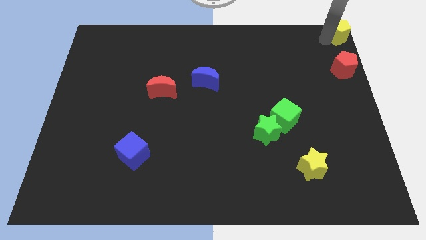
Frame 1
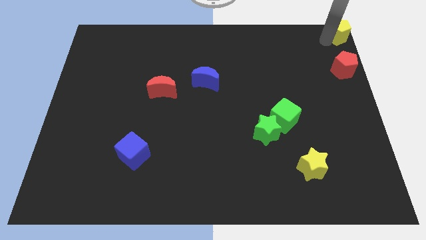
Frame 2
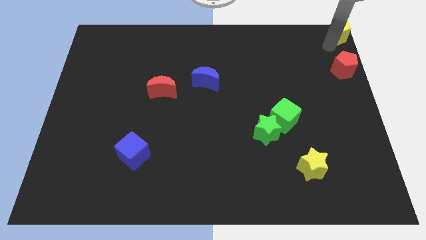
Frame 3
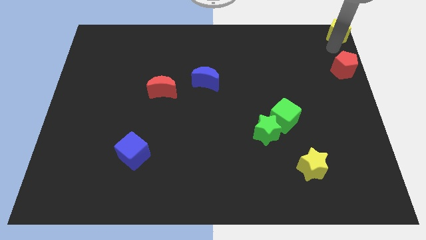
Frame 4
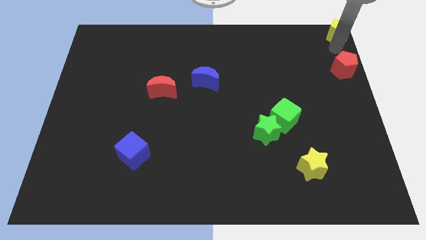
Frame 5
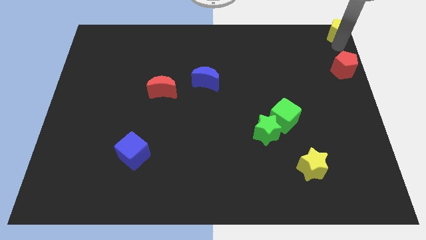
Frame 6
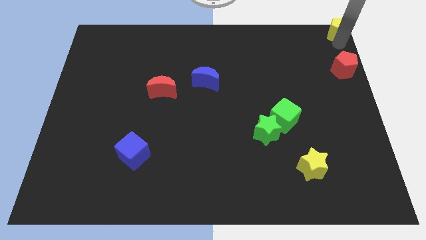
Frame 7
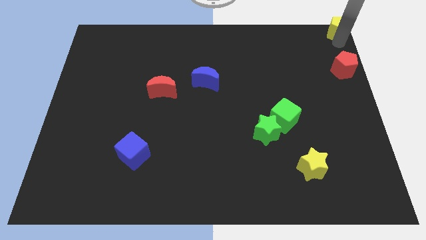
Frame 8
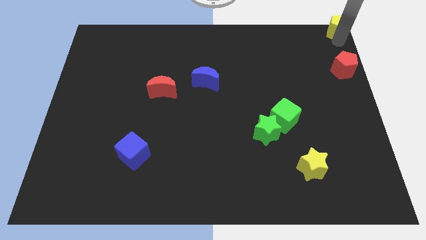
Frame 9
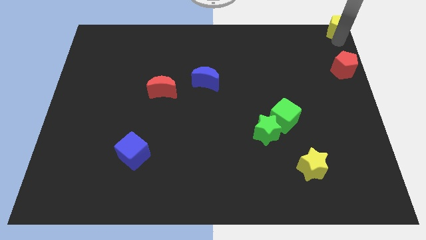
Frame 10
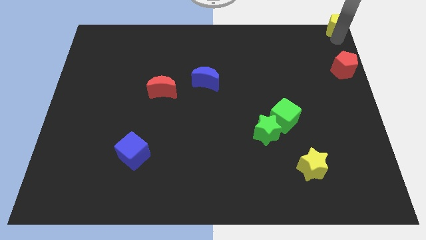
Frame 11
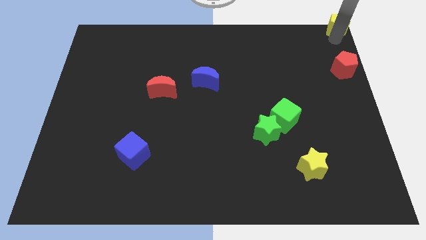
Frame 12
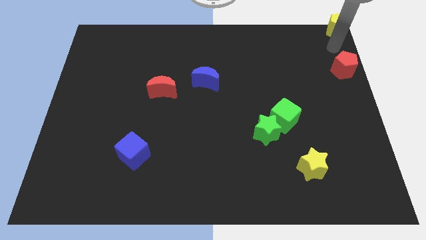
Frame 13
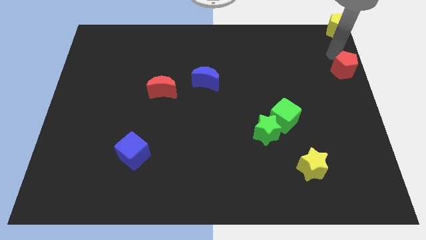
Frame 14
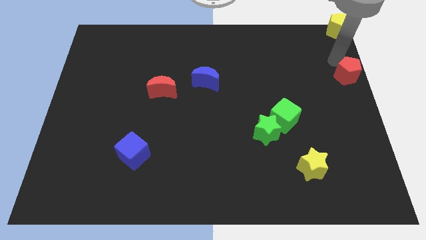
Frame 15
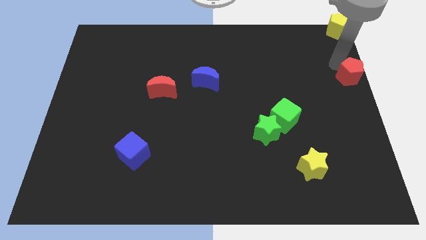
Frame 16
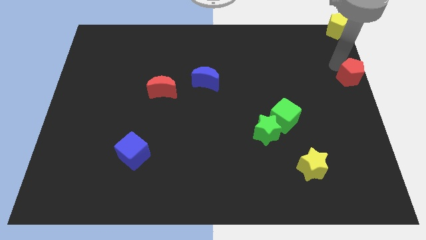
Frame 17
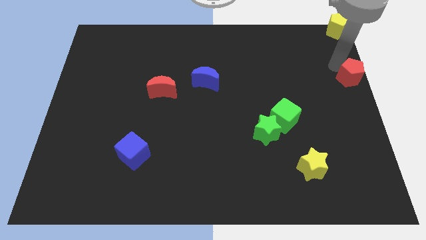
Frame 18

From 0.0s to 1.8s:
slightly touch your arm to the red pentagon

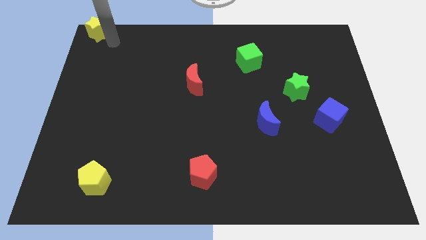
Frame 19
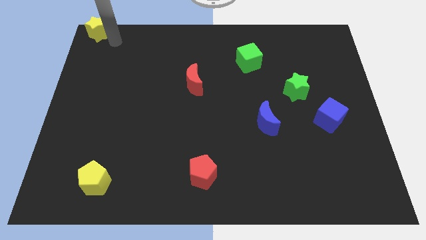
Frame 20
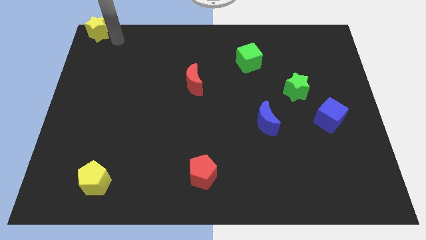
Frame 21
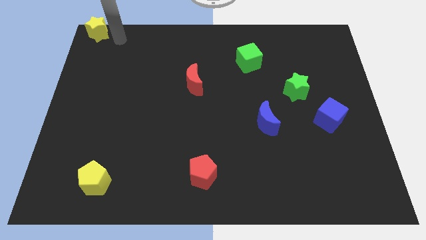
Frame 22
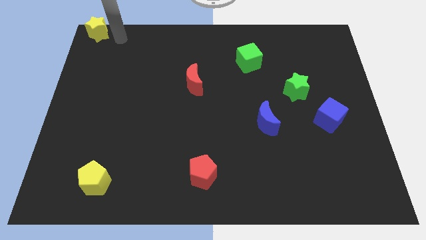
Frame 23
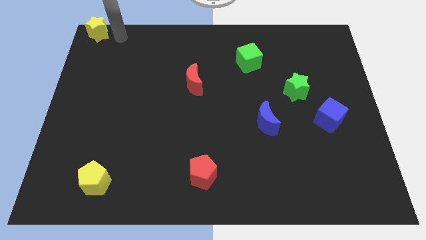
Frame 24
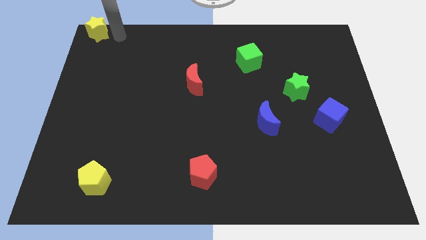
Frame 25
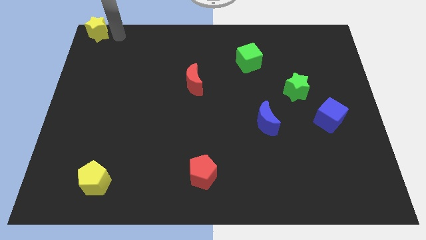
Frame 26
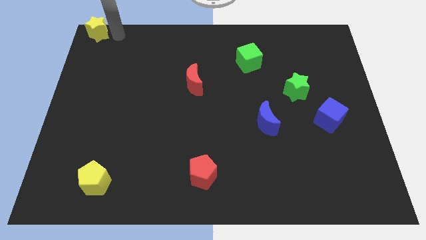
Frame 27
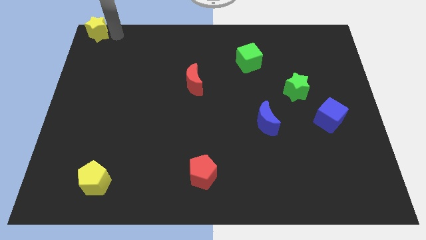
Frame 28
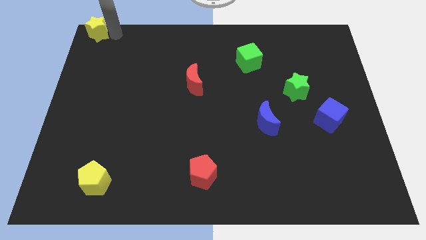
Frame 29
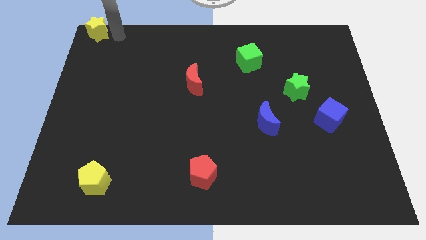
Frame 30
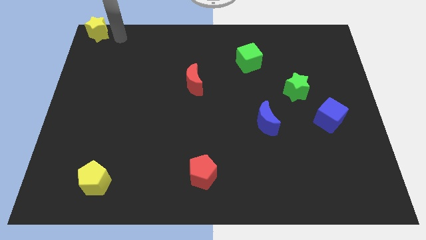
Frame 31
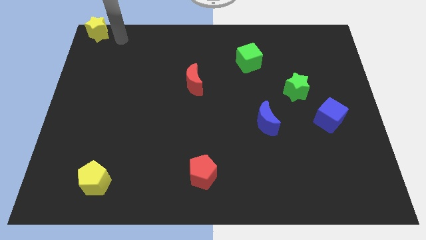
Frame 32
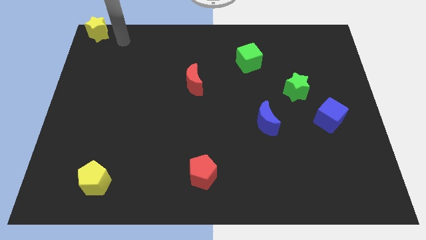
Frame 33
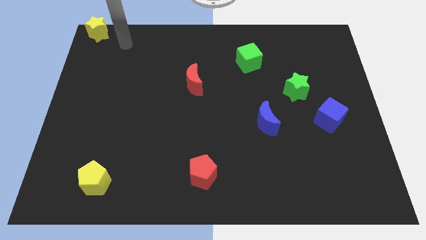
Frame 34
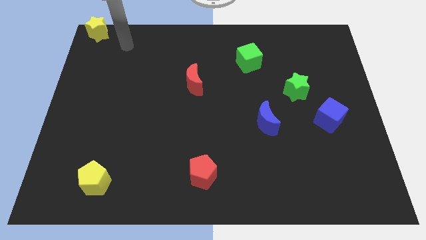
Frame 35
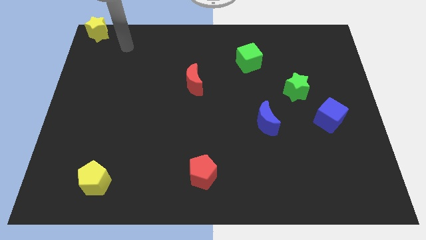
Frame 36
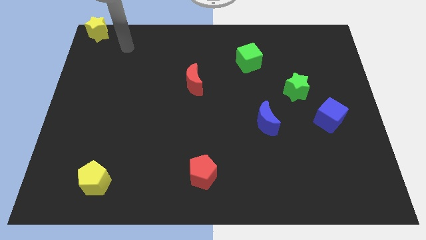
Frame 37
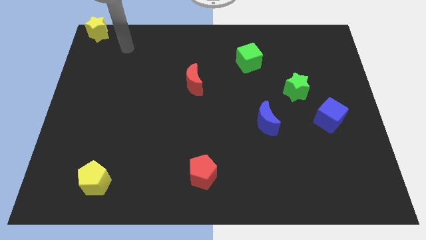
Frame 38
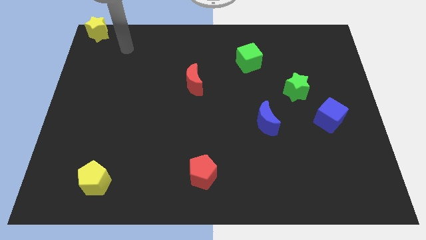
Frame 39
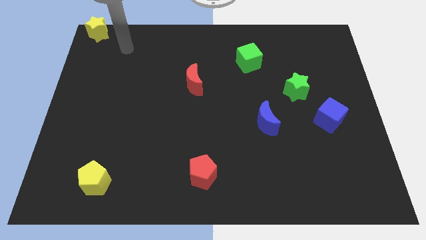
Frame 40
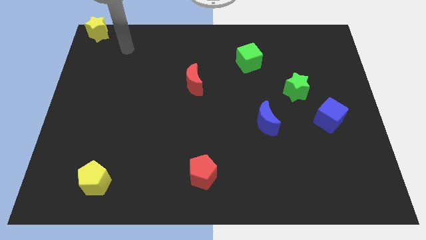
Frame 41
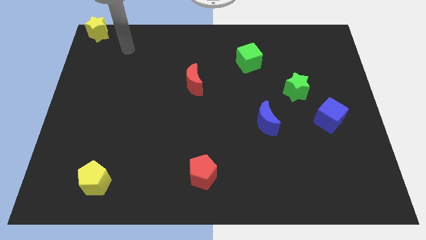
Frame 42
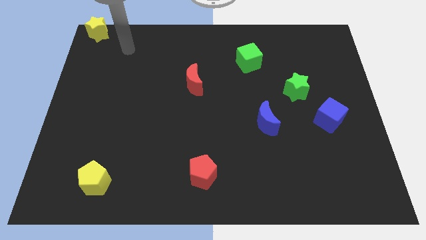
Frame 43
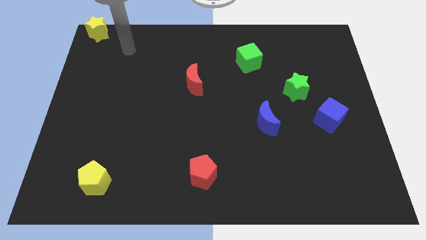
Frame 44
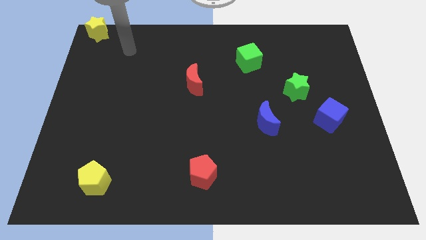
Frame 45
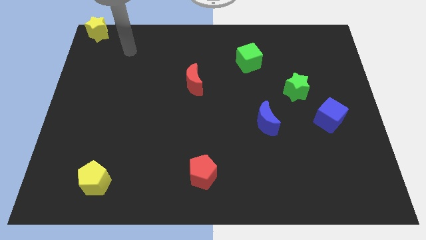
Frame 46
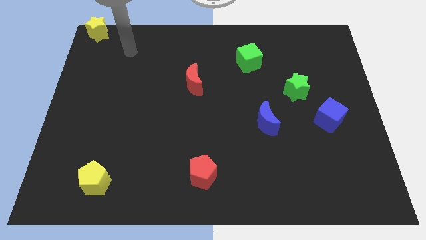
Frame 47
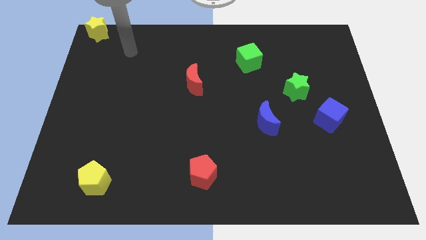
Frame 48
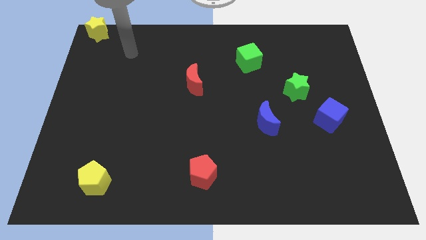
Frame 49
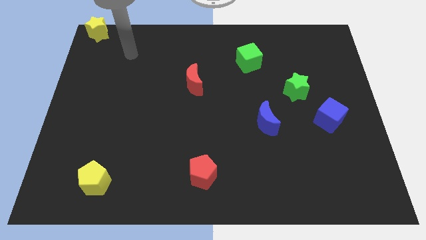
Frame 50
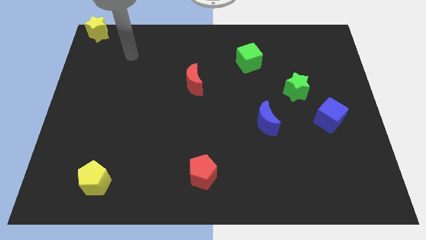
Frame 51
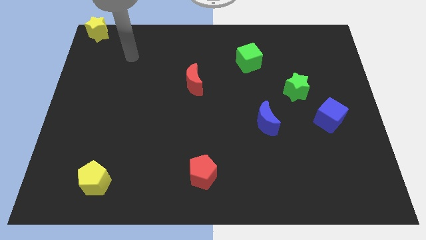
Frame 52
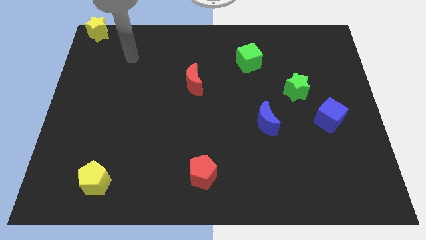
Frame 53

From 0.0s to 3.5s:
move your arm away from the yellow star

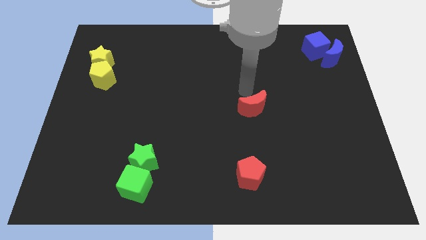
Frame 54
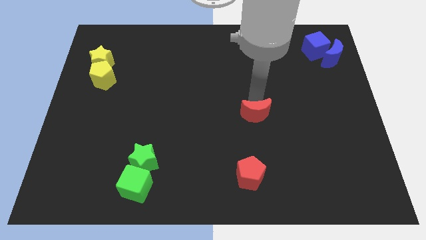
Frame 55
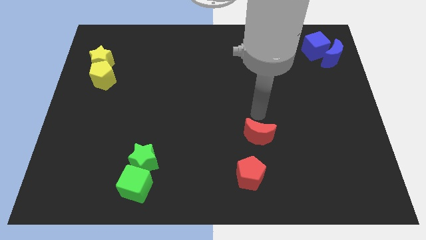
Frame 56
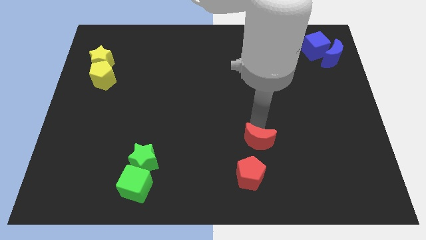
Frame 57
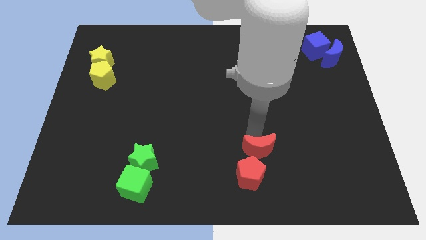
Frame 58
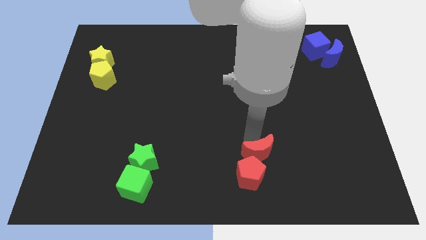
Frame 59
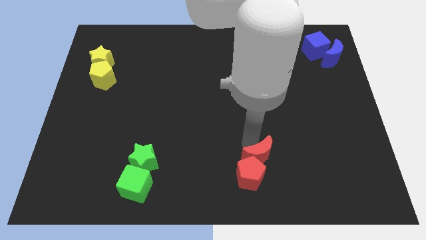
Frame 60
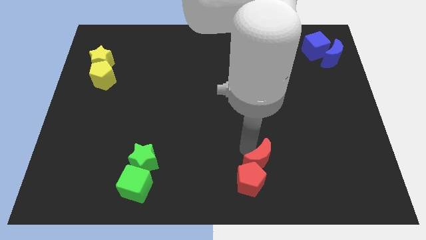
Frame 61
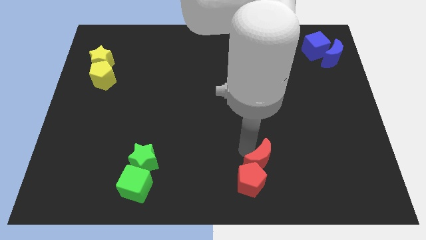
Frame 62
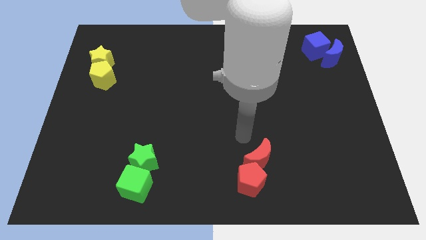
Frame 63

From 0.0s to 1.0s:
put the red moon into the red pentagon

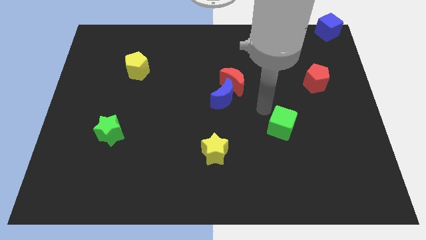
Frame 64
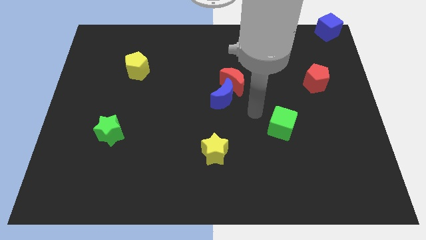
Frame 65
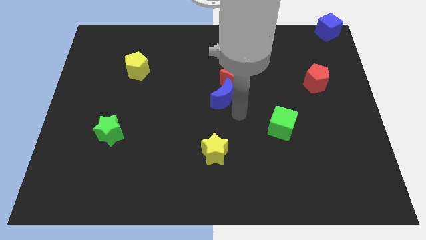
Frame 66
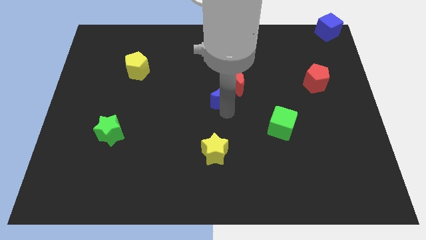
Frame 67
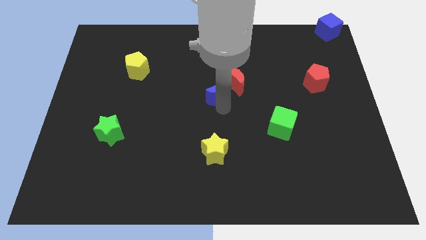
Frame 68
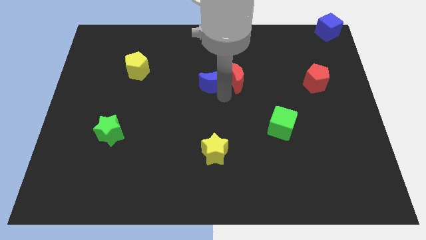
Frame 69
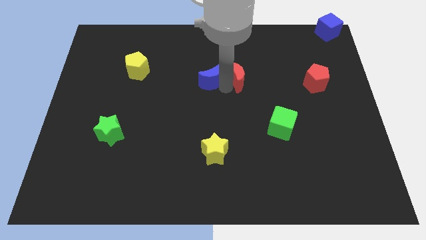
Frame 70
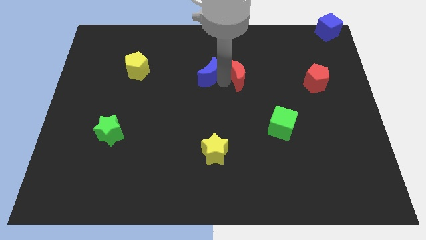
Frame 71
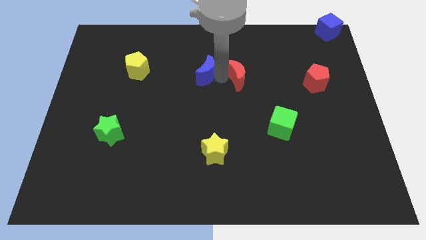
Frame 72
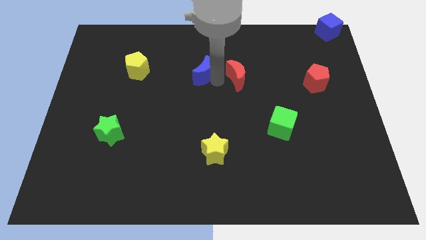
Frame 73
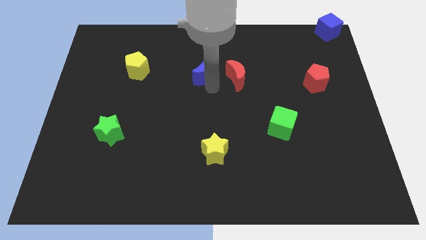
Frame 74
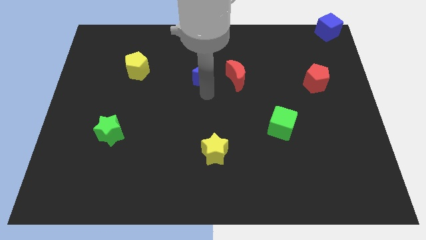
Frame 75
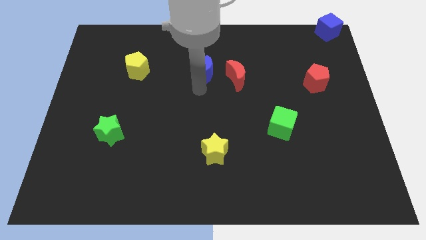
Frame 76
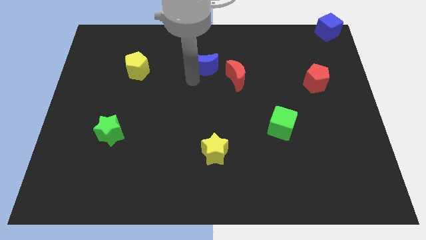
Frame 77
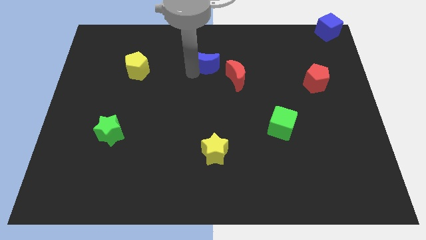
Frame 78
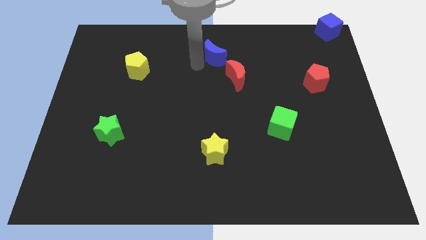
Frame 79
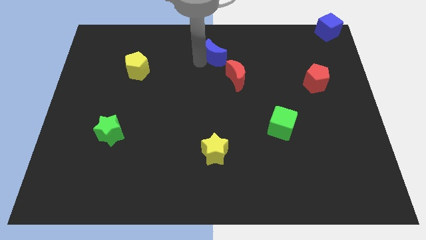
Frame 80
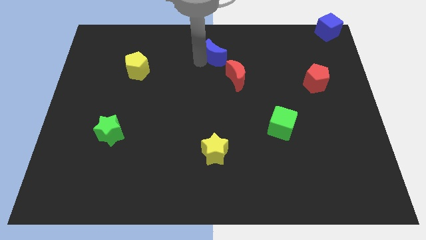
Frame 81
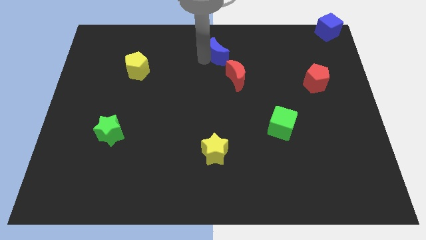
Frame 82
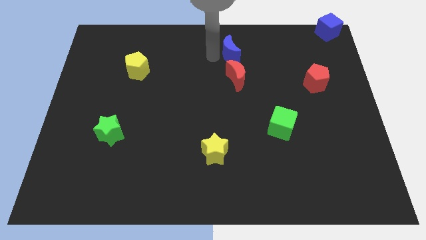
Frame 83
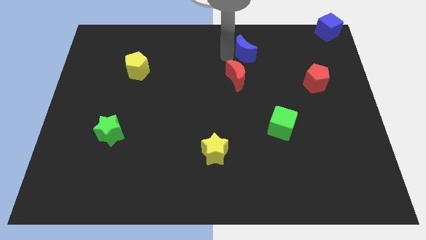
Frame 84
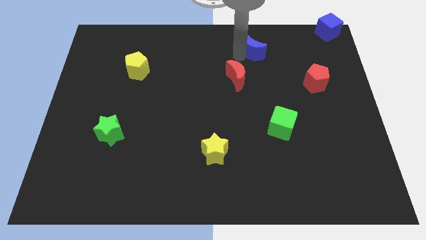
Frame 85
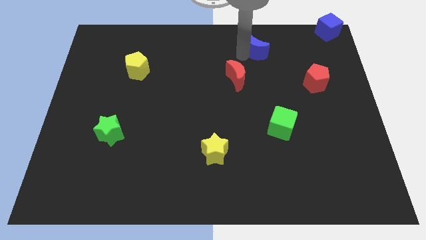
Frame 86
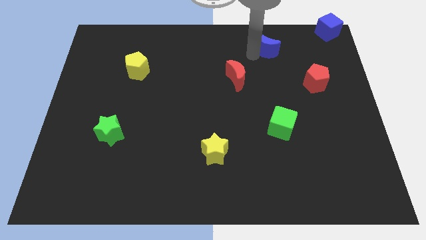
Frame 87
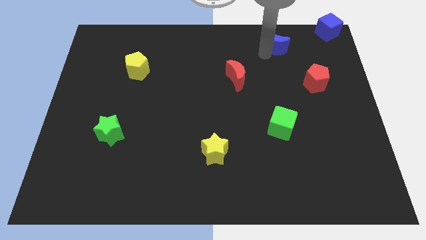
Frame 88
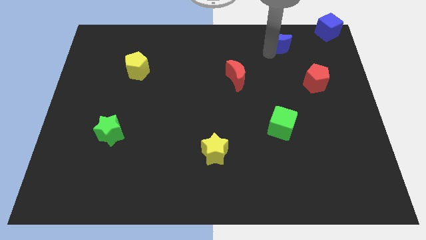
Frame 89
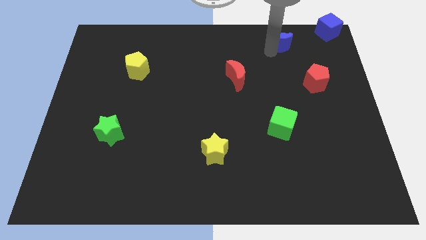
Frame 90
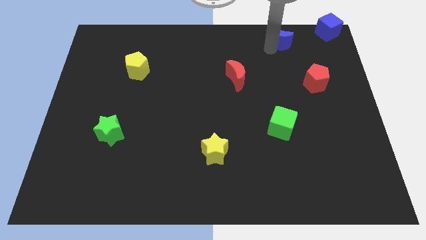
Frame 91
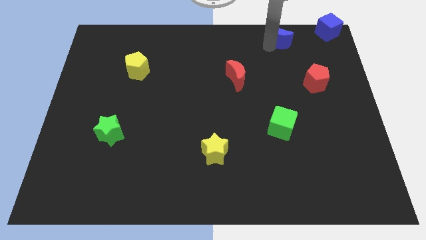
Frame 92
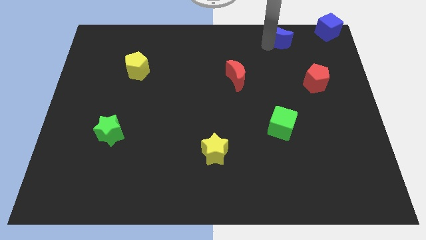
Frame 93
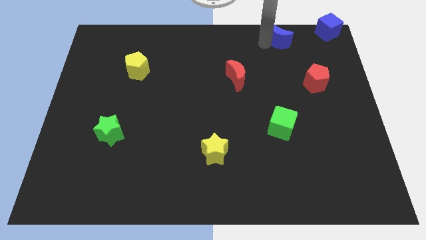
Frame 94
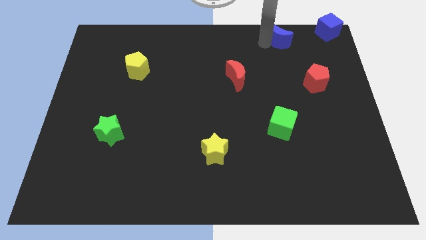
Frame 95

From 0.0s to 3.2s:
drag the blue moon towards the blue cube
